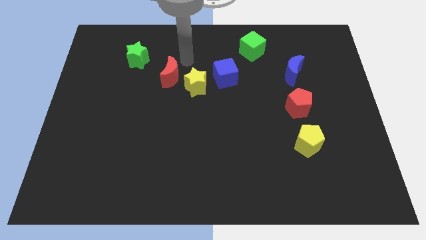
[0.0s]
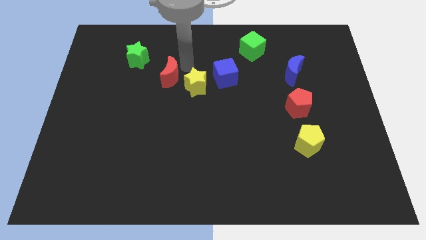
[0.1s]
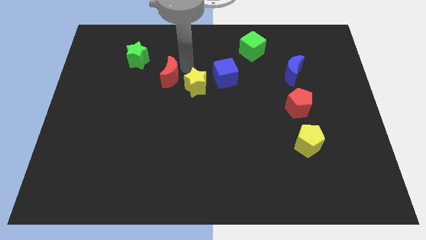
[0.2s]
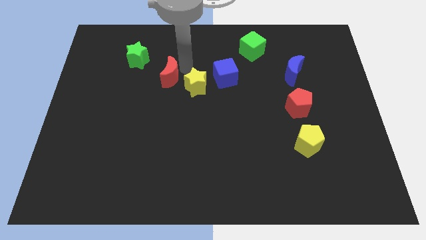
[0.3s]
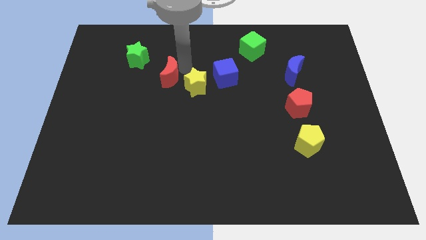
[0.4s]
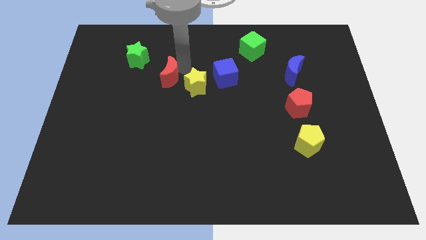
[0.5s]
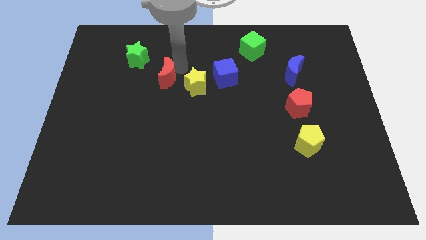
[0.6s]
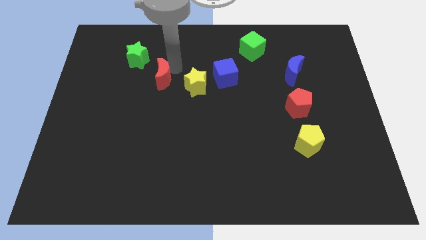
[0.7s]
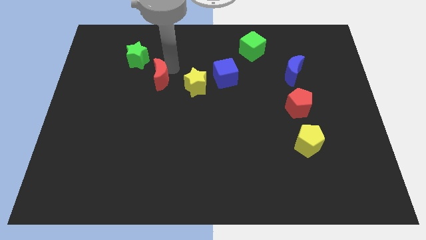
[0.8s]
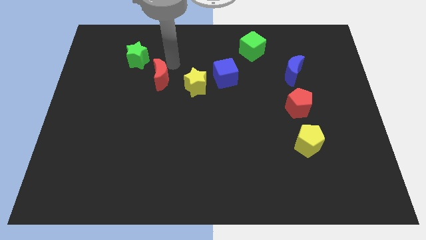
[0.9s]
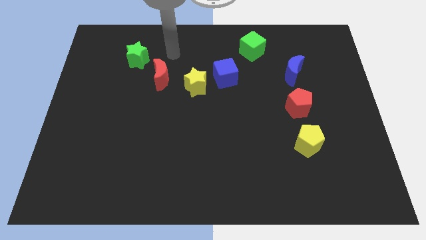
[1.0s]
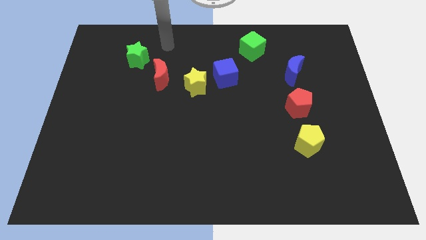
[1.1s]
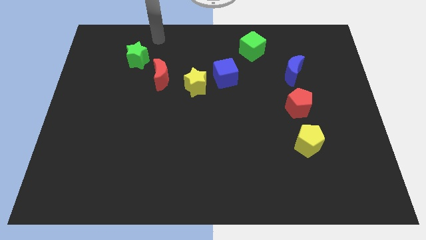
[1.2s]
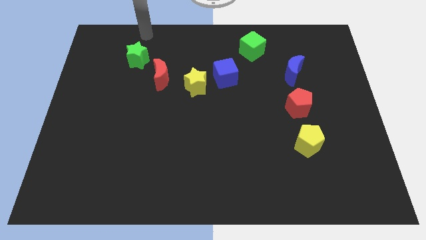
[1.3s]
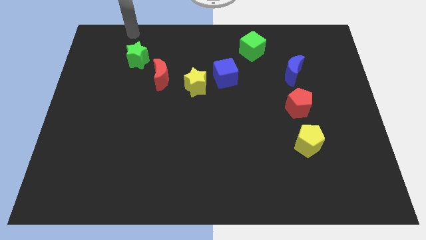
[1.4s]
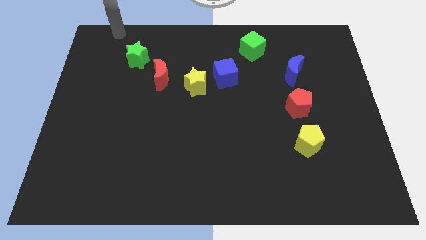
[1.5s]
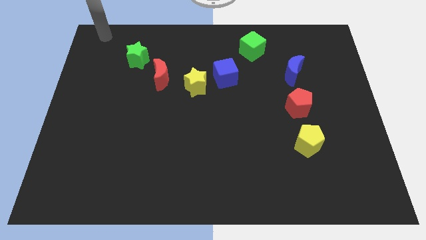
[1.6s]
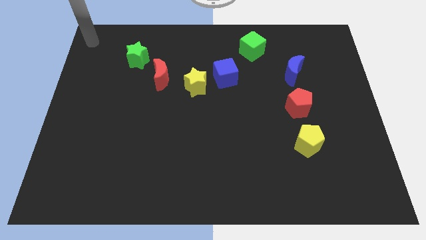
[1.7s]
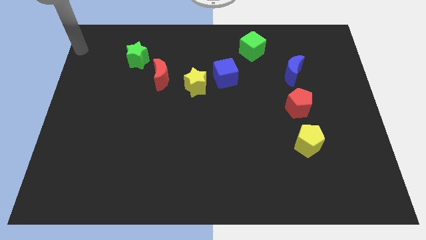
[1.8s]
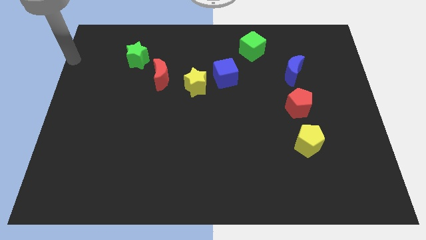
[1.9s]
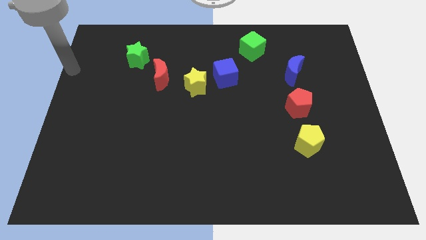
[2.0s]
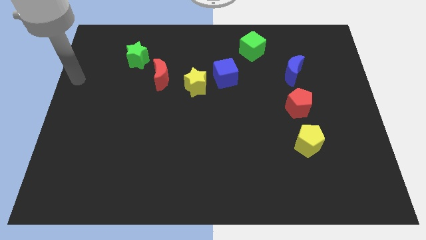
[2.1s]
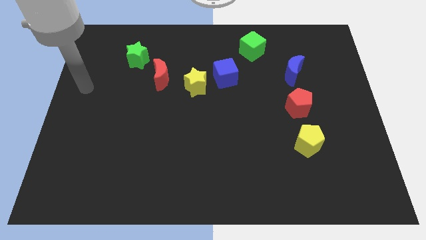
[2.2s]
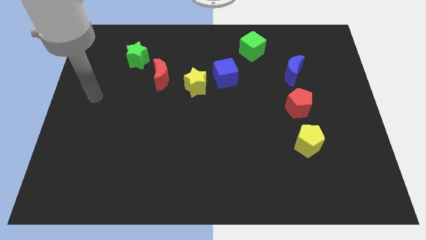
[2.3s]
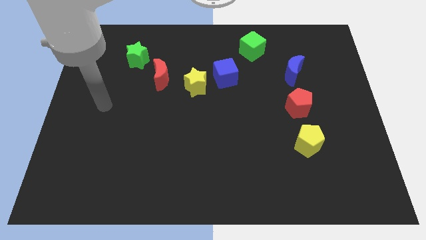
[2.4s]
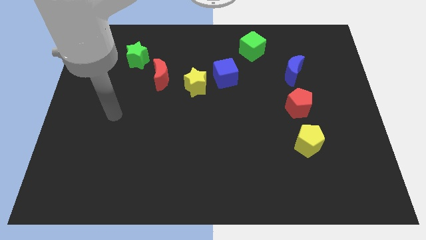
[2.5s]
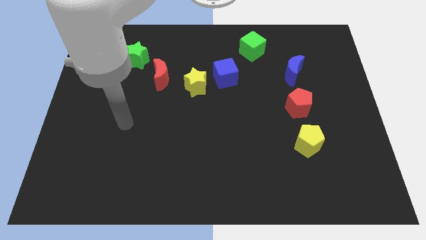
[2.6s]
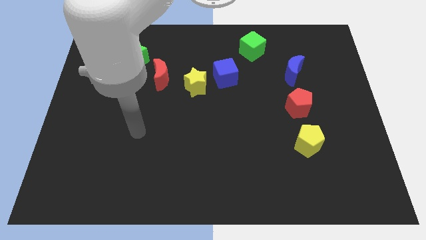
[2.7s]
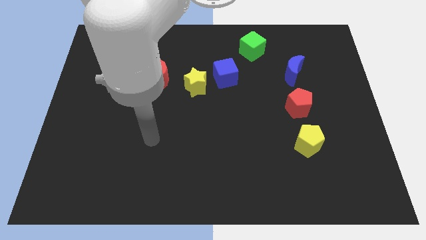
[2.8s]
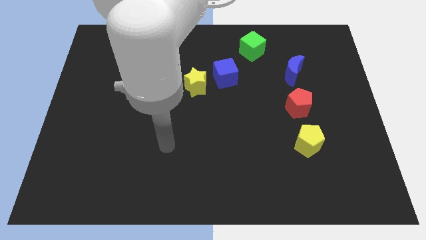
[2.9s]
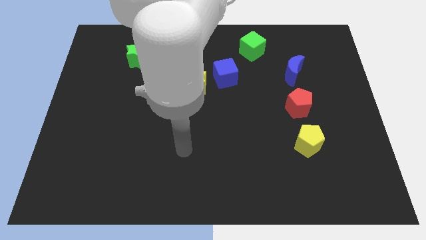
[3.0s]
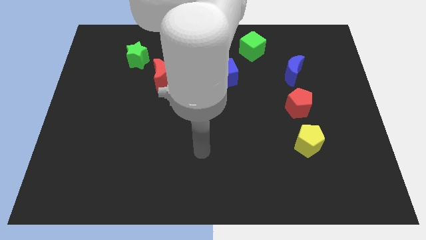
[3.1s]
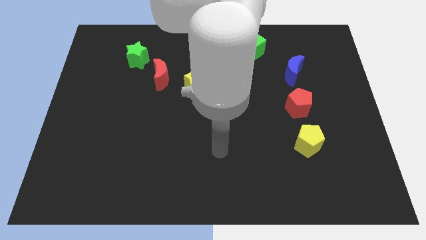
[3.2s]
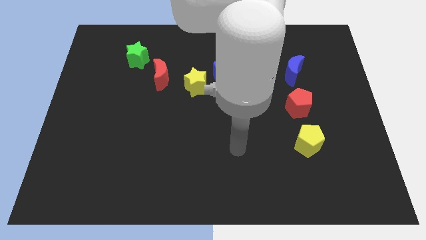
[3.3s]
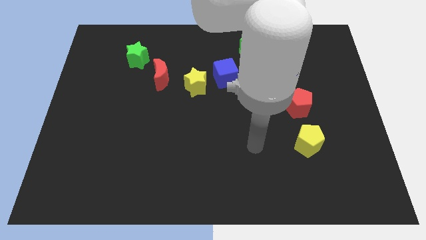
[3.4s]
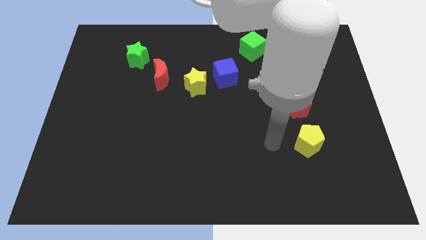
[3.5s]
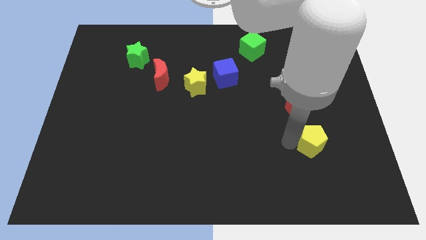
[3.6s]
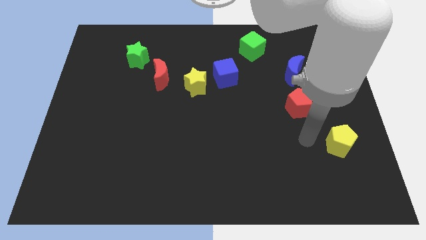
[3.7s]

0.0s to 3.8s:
touch the top of red crescent and yellow pentagon

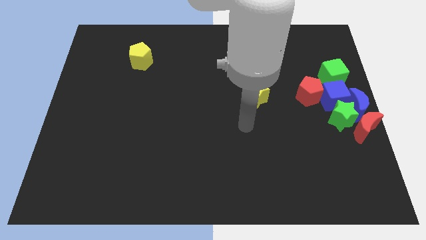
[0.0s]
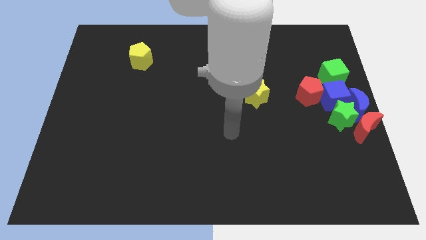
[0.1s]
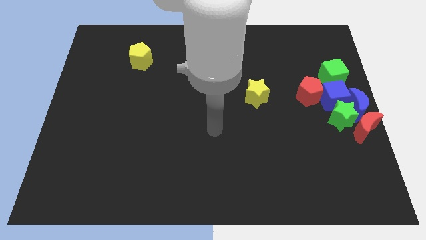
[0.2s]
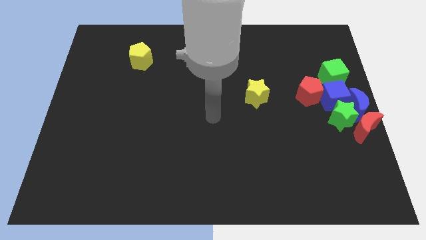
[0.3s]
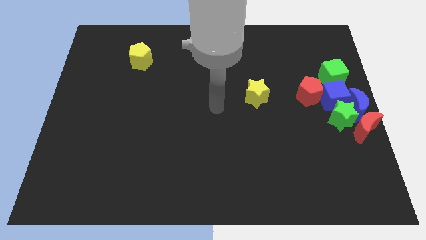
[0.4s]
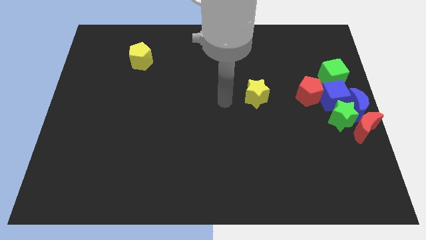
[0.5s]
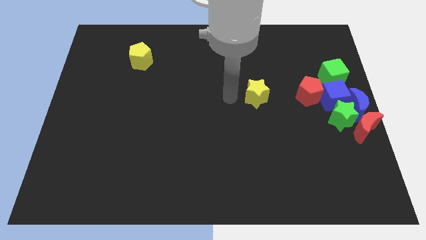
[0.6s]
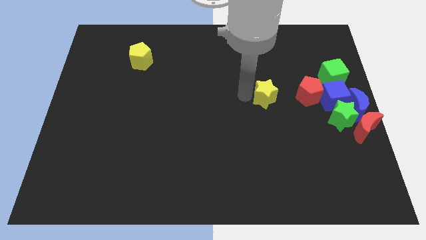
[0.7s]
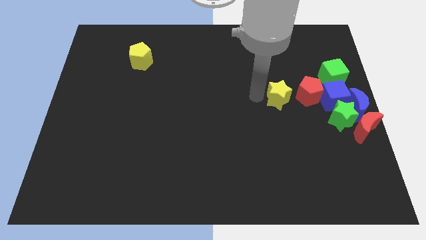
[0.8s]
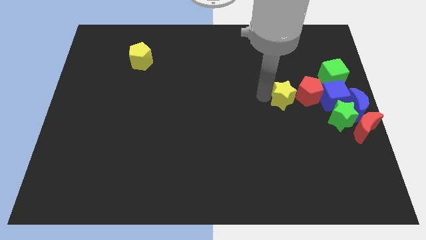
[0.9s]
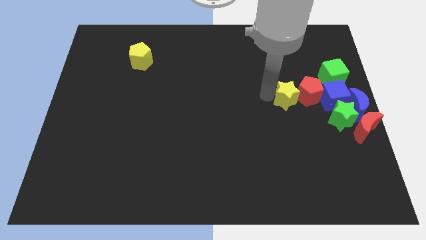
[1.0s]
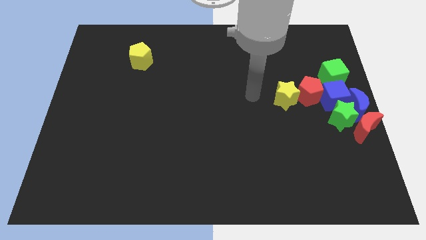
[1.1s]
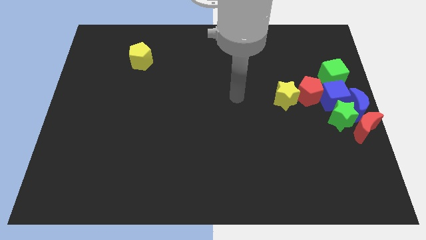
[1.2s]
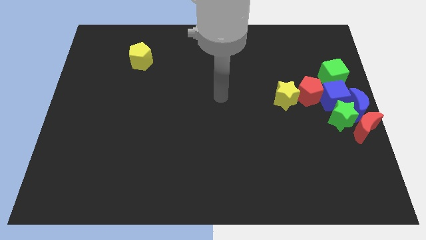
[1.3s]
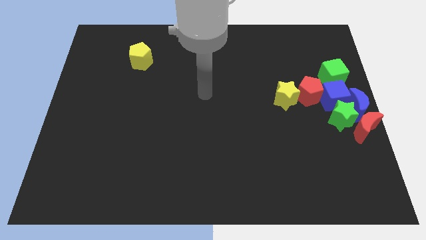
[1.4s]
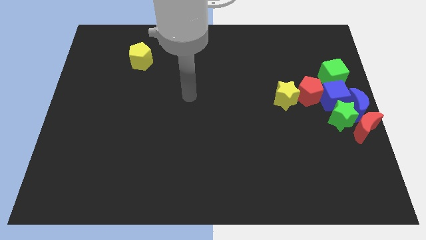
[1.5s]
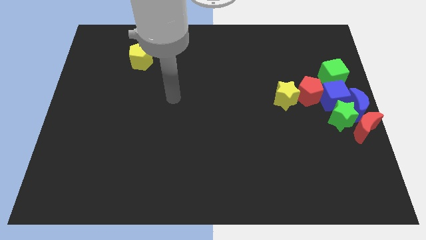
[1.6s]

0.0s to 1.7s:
push the yellow star to the left of the red pentagon

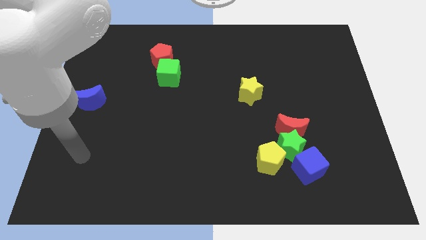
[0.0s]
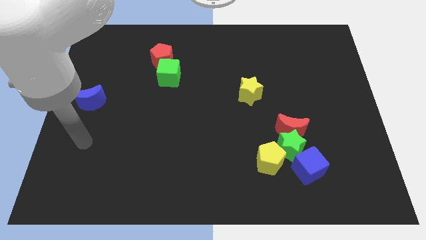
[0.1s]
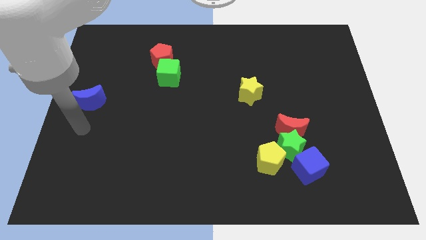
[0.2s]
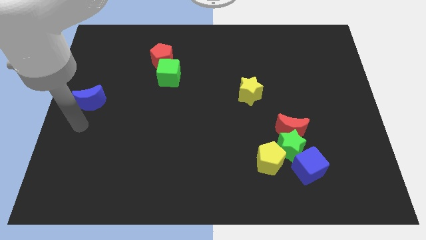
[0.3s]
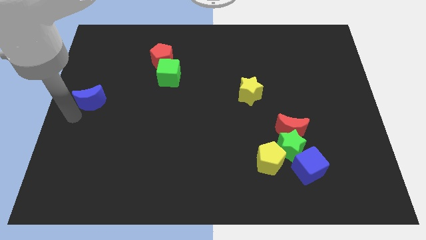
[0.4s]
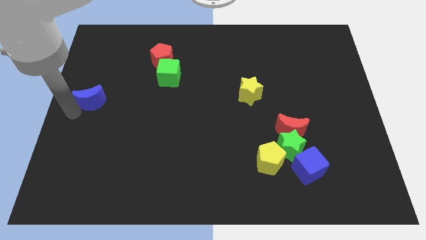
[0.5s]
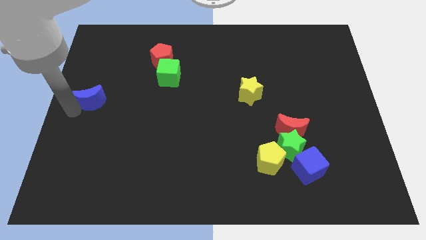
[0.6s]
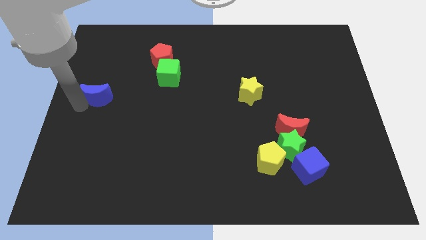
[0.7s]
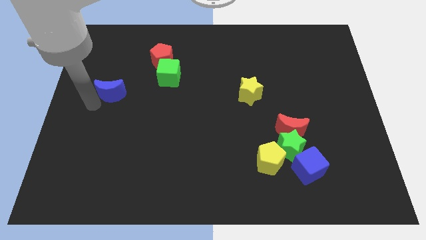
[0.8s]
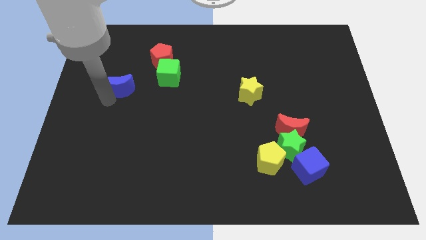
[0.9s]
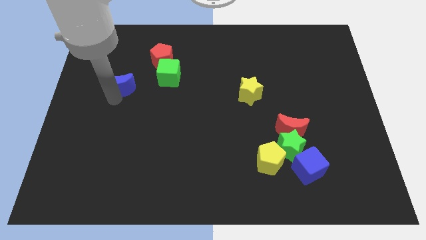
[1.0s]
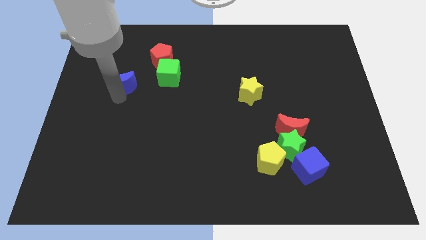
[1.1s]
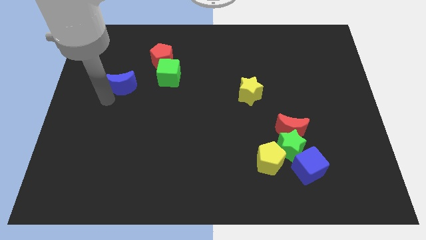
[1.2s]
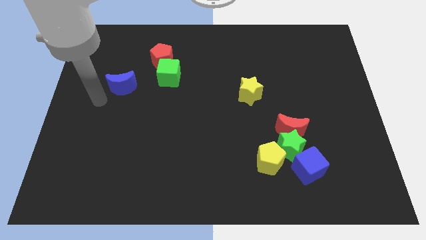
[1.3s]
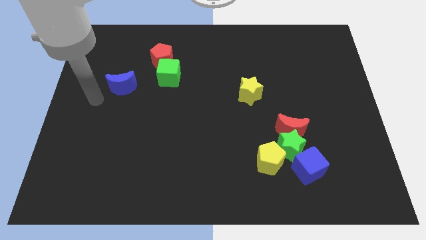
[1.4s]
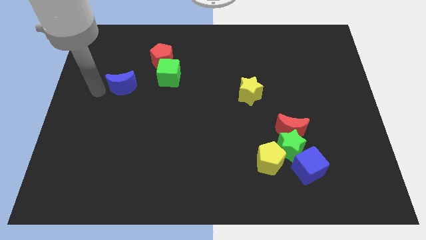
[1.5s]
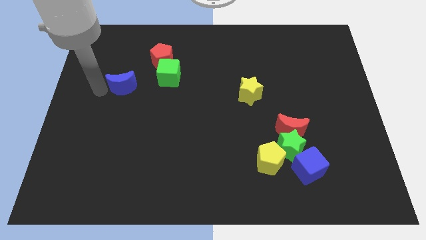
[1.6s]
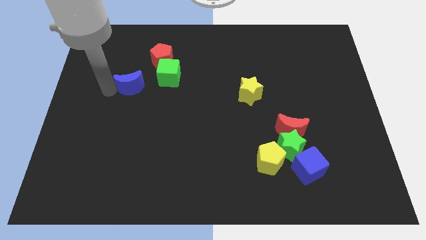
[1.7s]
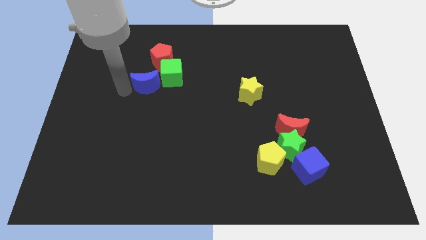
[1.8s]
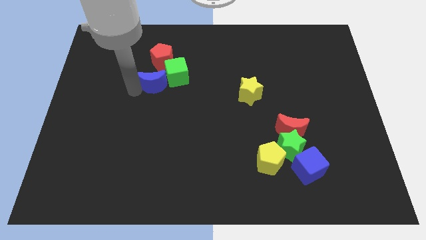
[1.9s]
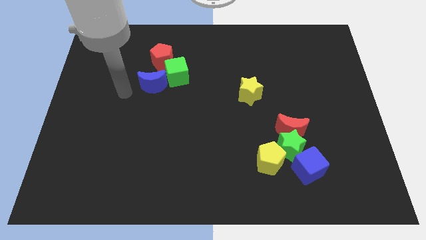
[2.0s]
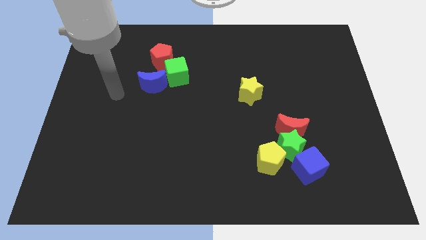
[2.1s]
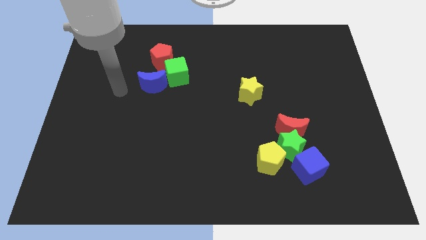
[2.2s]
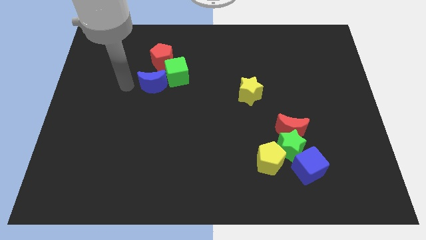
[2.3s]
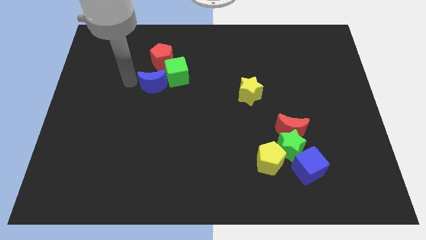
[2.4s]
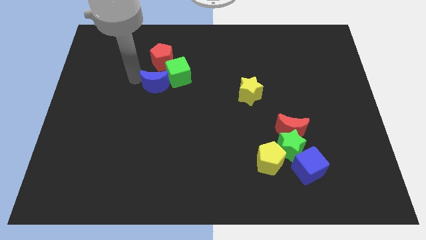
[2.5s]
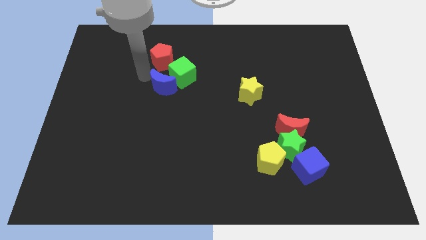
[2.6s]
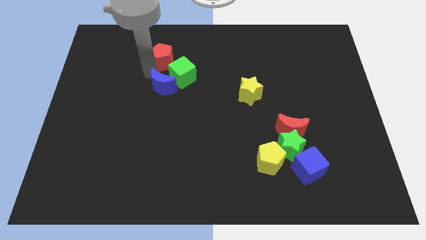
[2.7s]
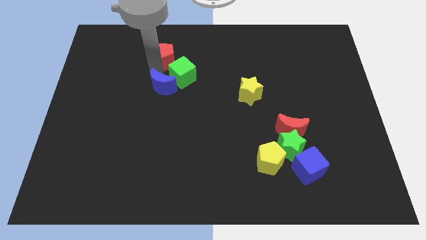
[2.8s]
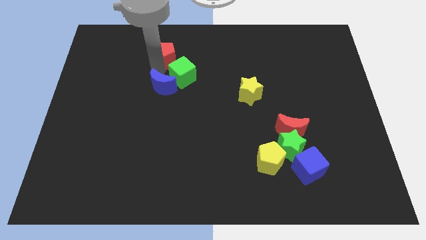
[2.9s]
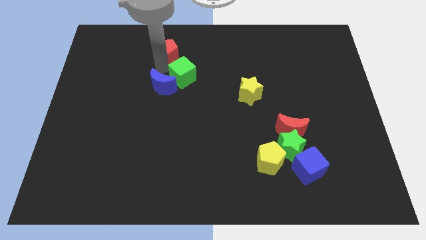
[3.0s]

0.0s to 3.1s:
slide blue moon into green star

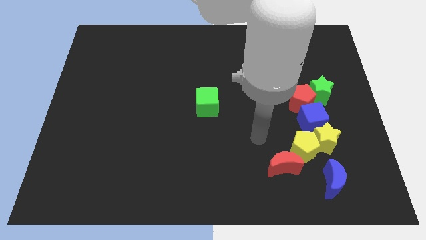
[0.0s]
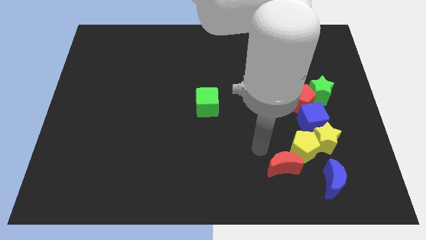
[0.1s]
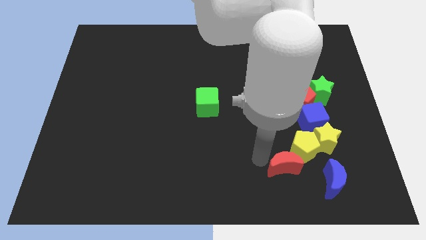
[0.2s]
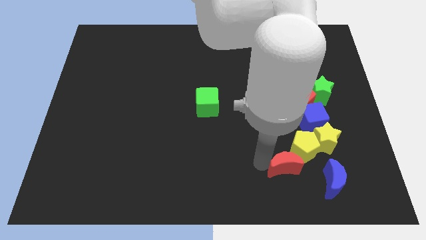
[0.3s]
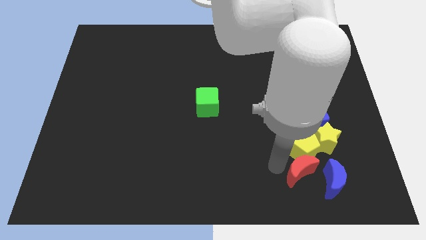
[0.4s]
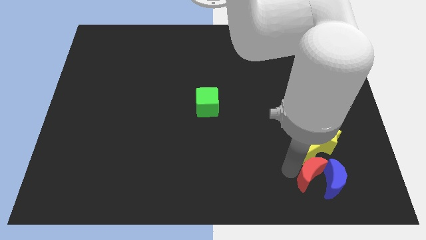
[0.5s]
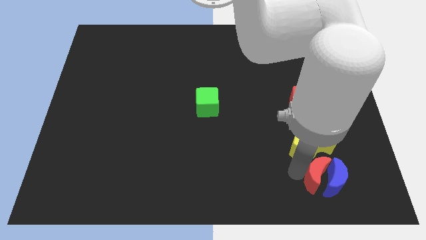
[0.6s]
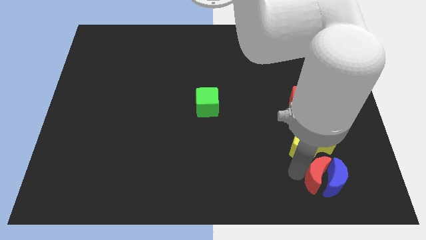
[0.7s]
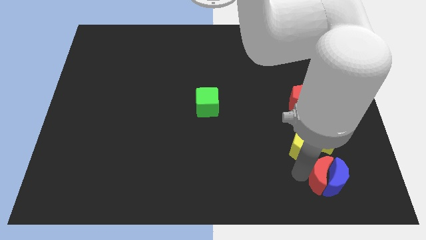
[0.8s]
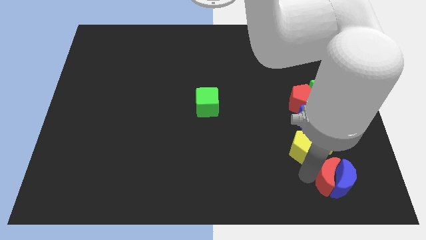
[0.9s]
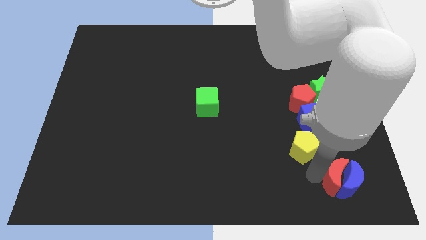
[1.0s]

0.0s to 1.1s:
move red moon away from the yellow pentagon
